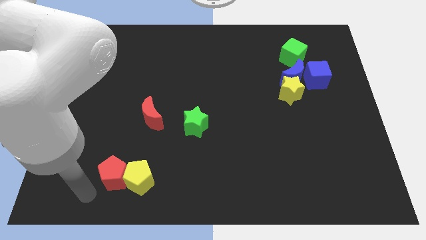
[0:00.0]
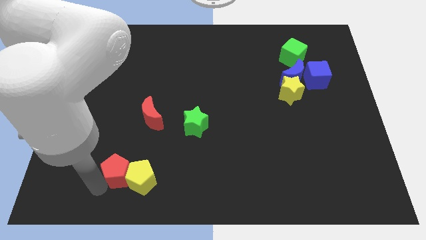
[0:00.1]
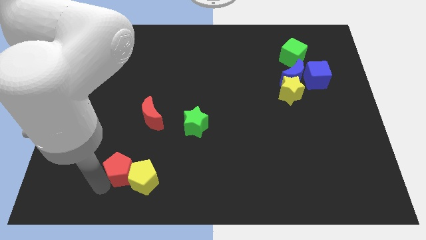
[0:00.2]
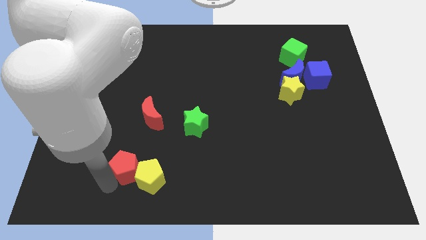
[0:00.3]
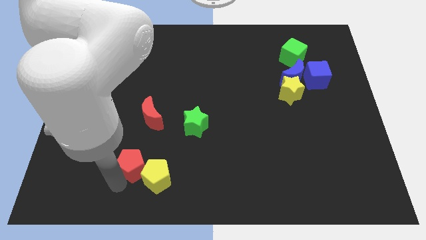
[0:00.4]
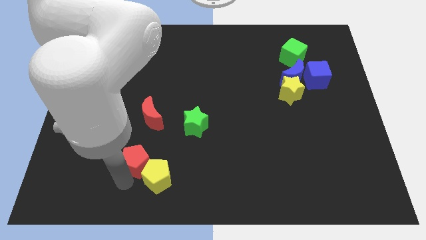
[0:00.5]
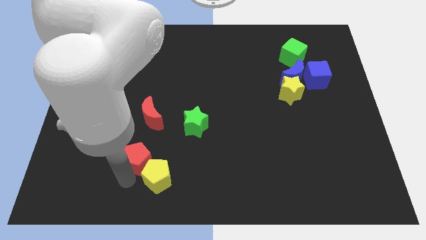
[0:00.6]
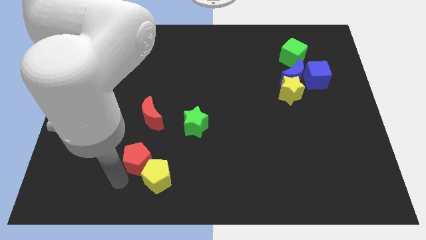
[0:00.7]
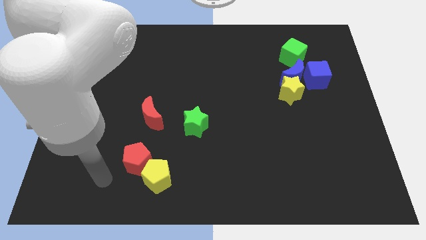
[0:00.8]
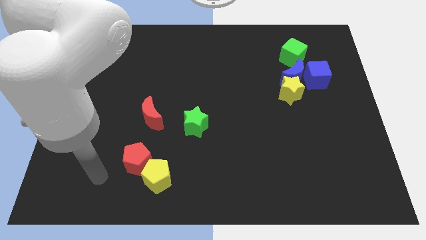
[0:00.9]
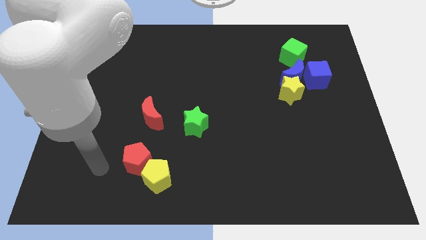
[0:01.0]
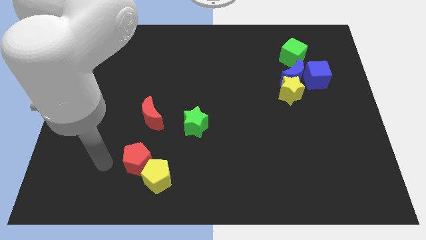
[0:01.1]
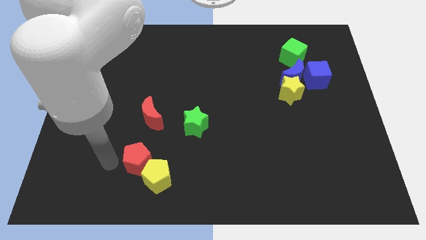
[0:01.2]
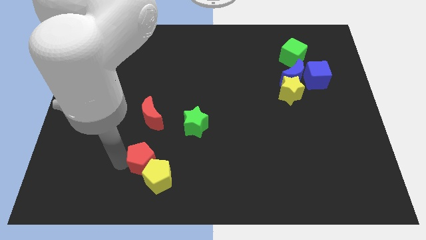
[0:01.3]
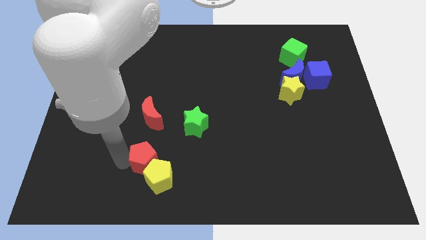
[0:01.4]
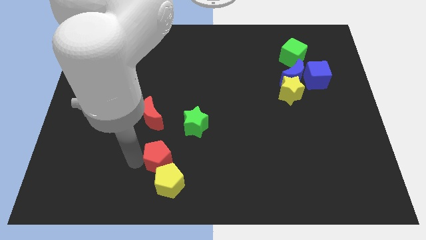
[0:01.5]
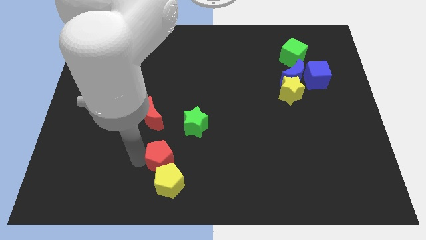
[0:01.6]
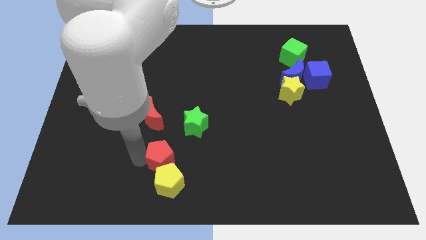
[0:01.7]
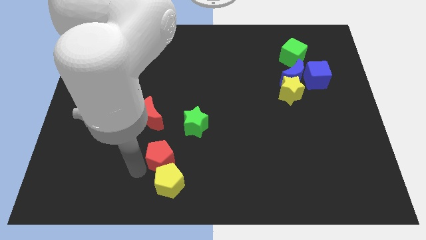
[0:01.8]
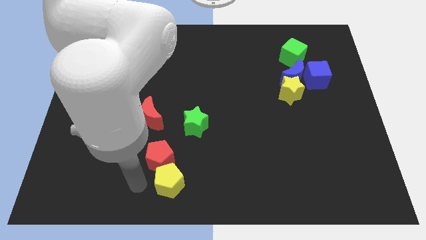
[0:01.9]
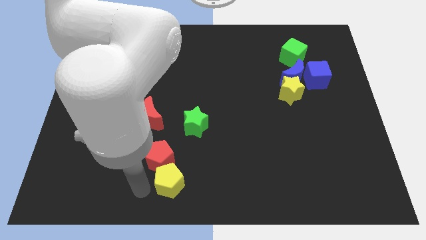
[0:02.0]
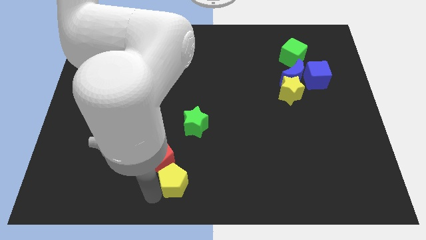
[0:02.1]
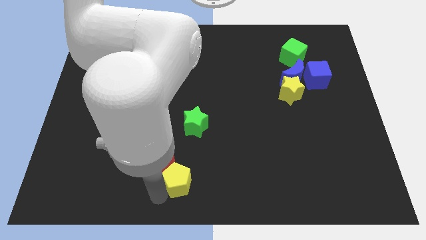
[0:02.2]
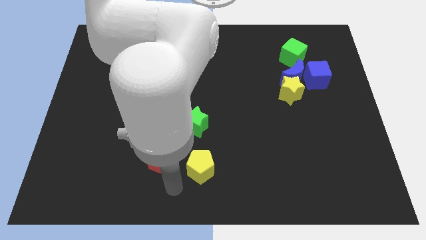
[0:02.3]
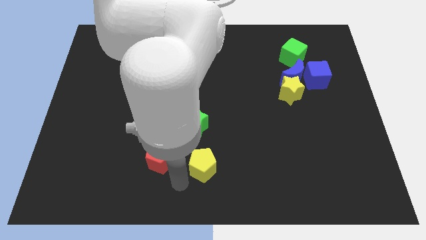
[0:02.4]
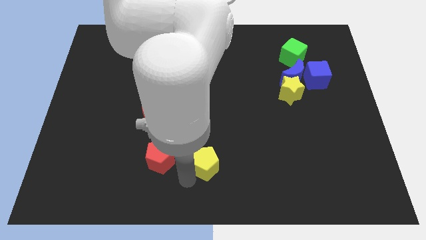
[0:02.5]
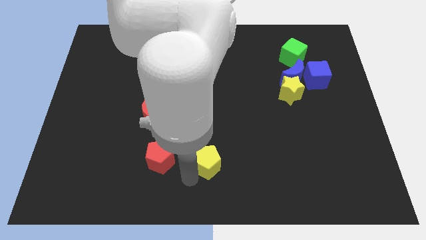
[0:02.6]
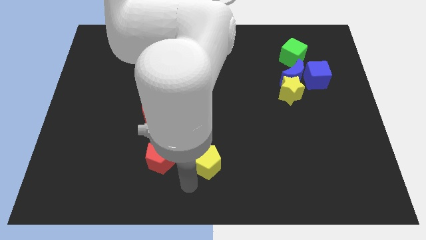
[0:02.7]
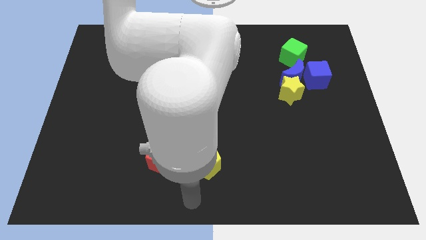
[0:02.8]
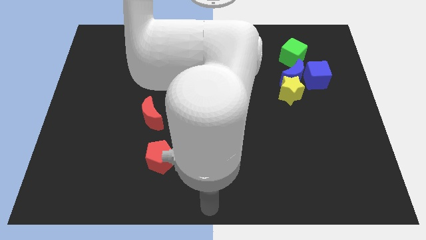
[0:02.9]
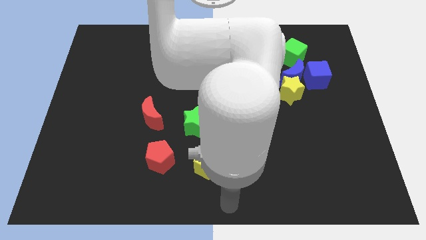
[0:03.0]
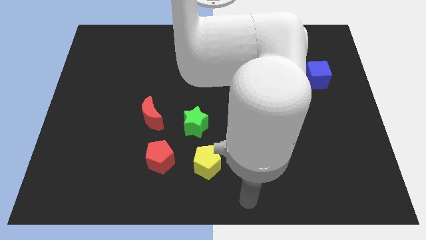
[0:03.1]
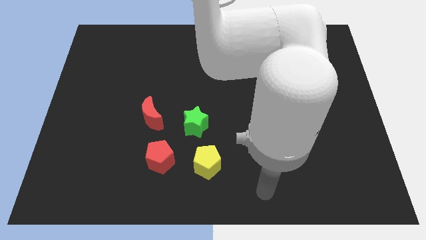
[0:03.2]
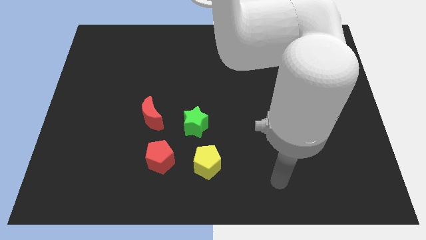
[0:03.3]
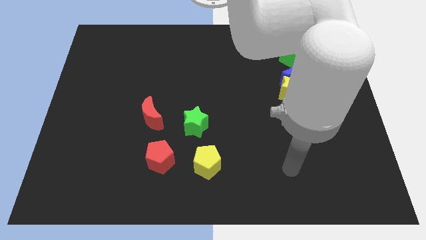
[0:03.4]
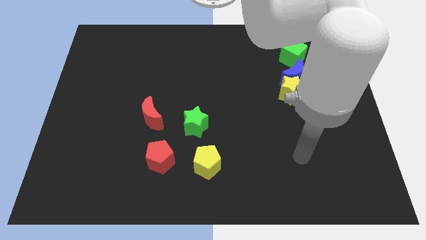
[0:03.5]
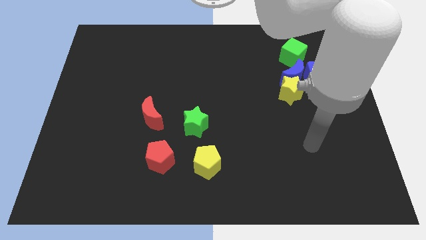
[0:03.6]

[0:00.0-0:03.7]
separate the red pentagon and the yellow pentagon

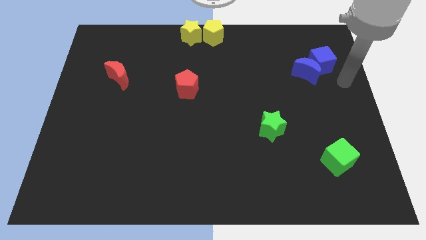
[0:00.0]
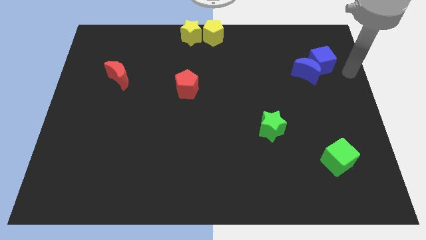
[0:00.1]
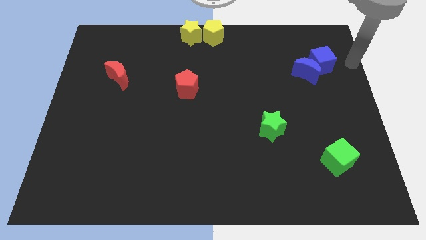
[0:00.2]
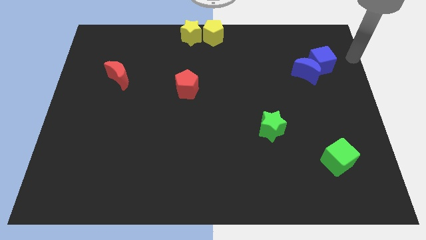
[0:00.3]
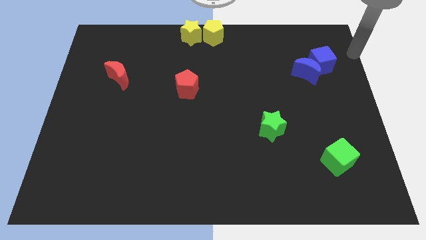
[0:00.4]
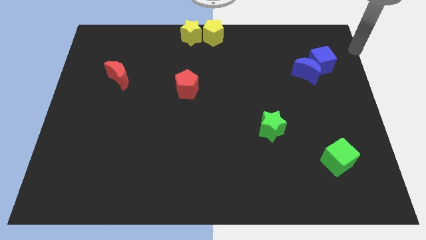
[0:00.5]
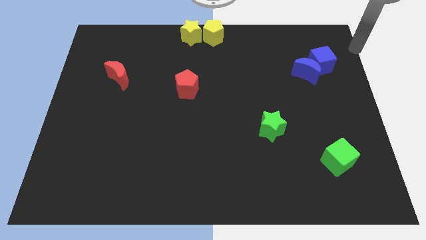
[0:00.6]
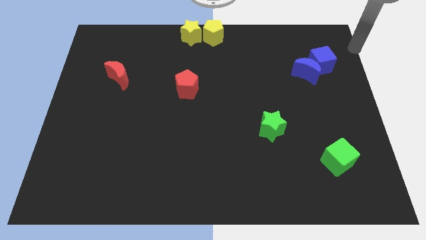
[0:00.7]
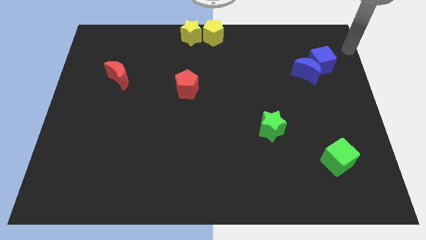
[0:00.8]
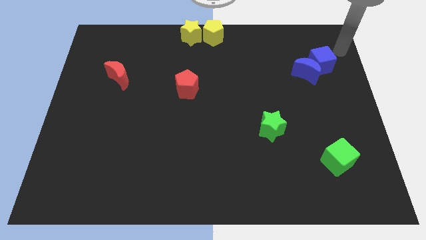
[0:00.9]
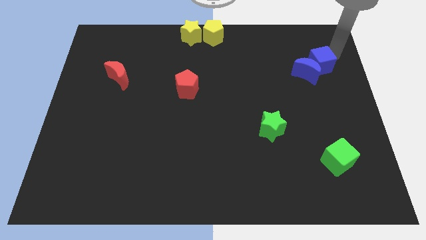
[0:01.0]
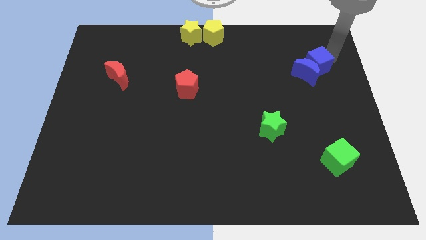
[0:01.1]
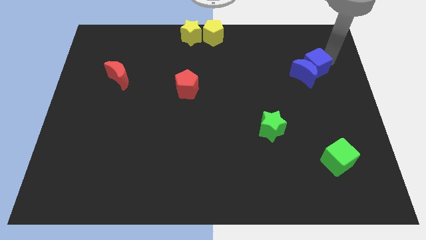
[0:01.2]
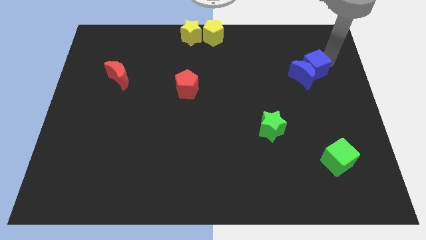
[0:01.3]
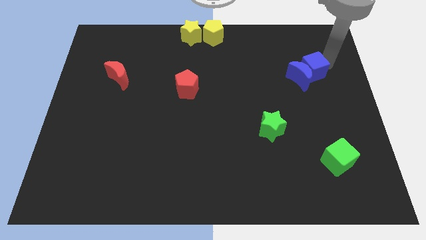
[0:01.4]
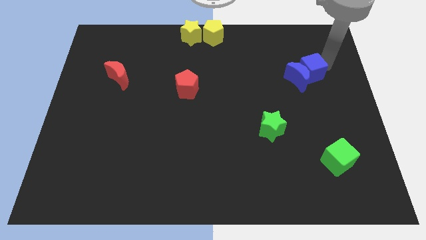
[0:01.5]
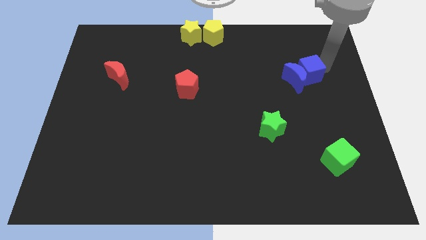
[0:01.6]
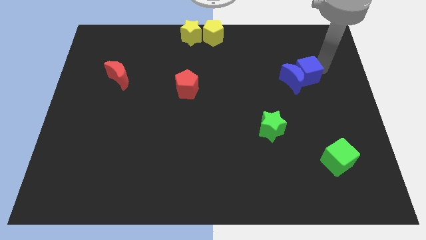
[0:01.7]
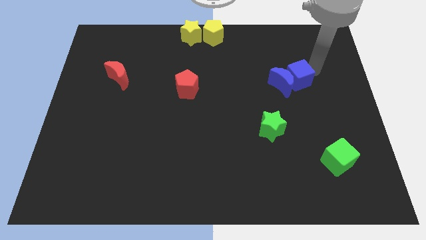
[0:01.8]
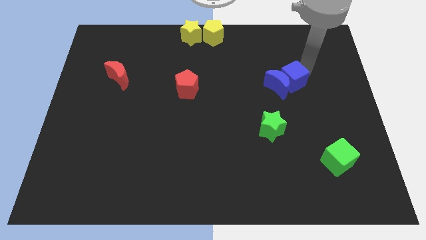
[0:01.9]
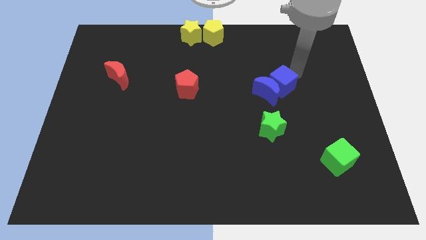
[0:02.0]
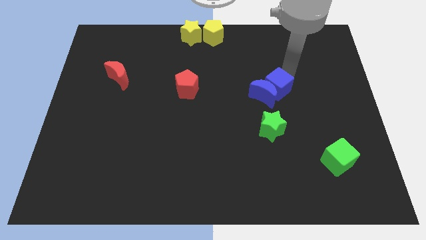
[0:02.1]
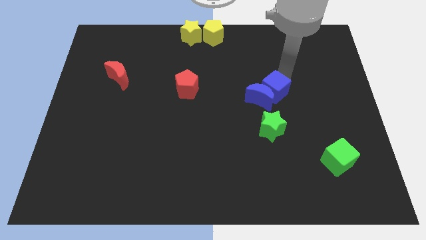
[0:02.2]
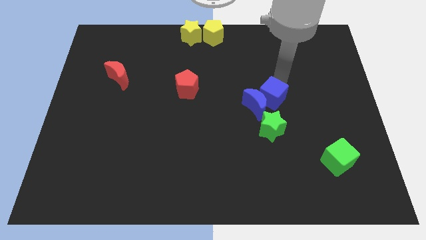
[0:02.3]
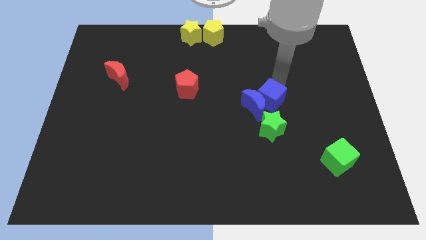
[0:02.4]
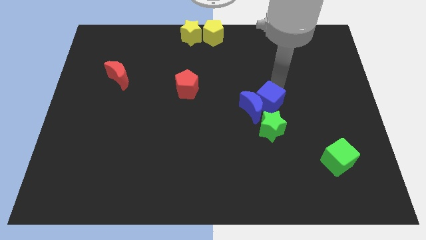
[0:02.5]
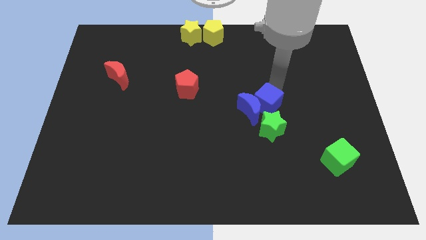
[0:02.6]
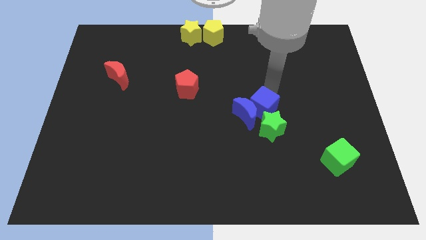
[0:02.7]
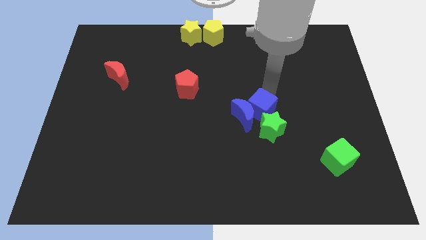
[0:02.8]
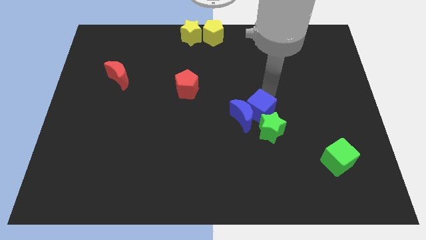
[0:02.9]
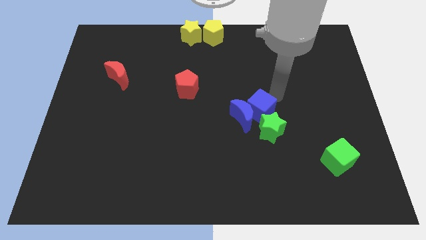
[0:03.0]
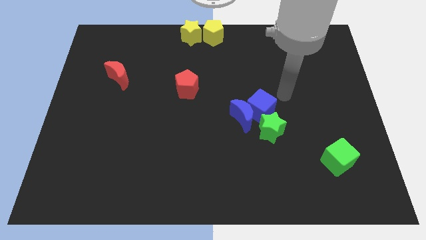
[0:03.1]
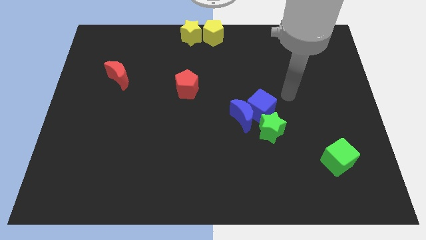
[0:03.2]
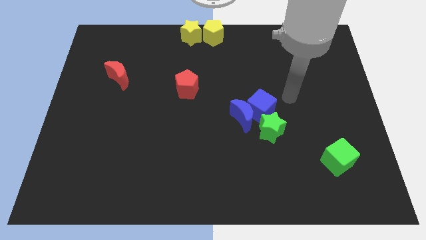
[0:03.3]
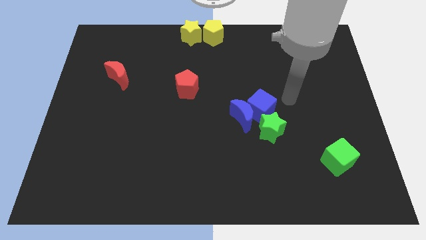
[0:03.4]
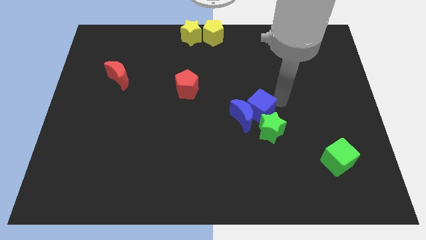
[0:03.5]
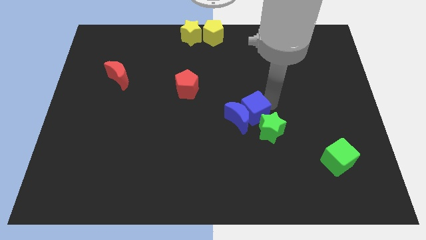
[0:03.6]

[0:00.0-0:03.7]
move blue cube to the top of green star

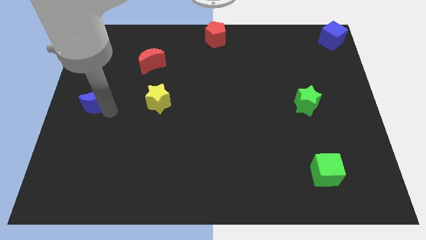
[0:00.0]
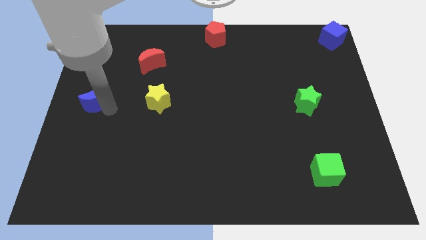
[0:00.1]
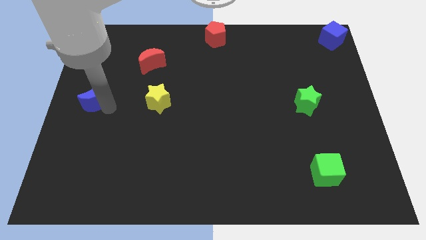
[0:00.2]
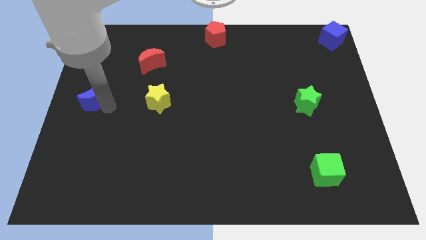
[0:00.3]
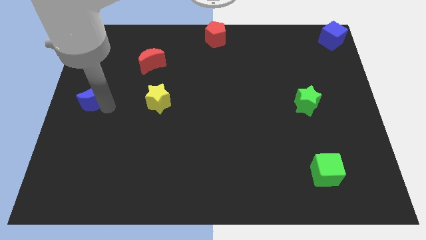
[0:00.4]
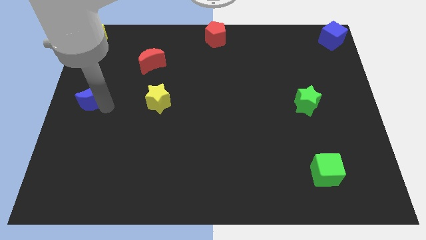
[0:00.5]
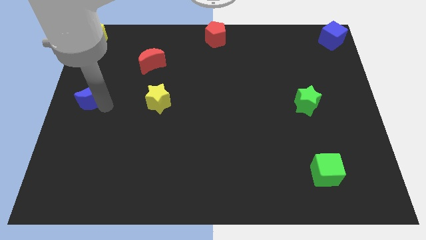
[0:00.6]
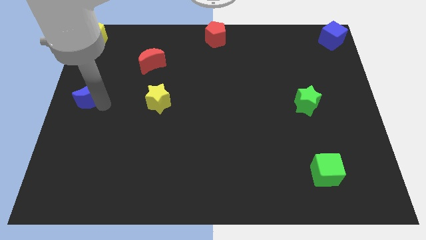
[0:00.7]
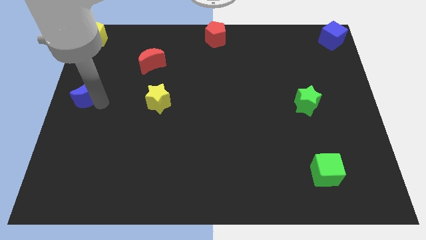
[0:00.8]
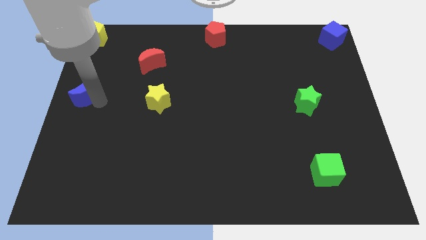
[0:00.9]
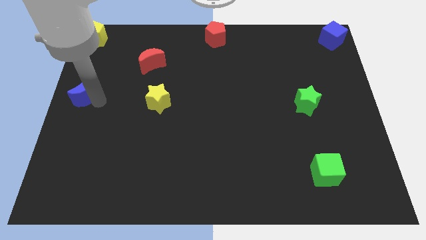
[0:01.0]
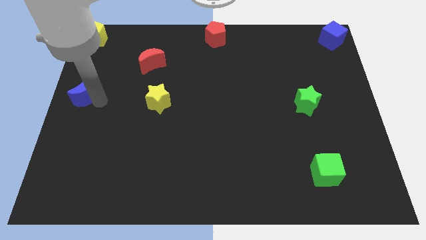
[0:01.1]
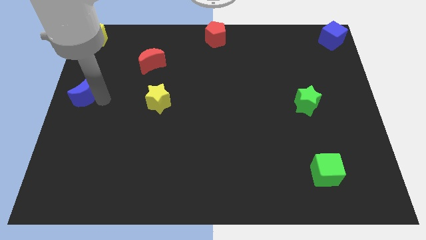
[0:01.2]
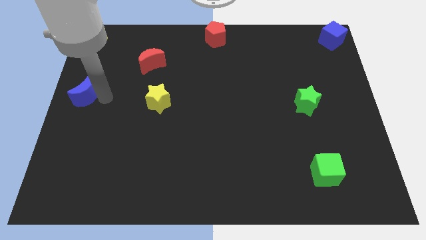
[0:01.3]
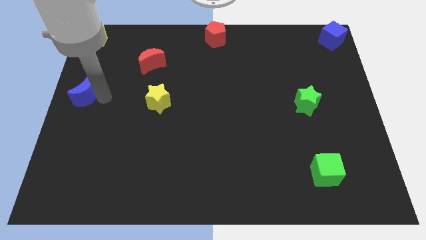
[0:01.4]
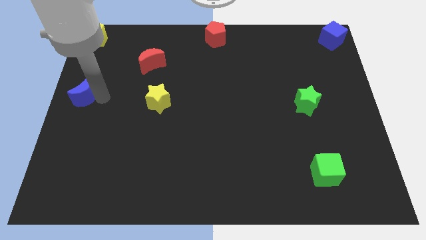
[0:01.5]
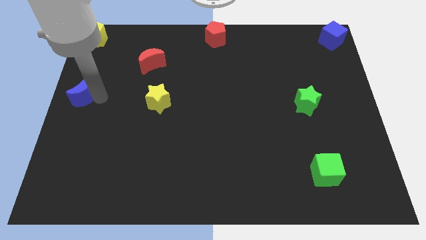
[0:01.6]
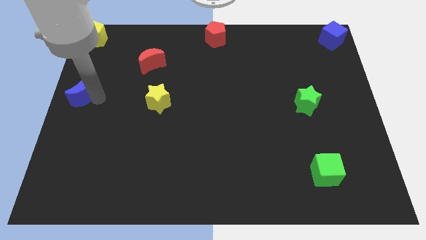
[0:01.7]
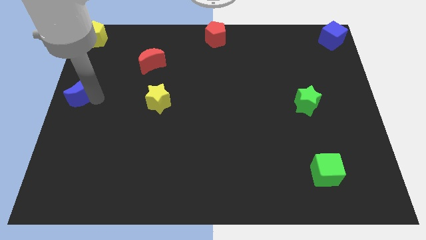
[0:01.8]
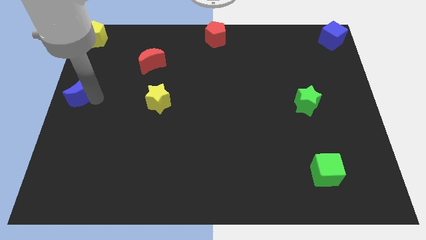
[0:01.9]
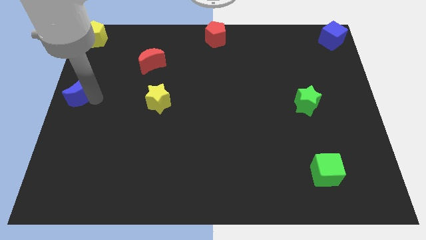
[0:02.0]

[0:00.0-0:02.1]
move the blue crescent to the left center of the board
